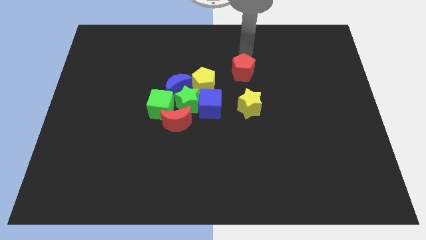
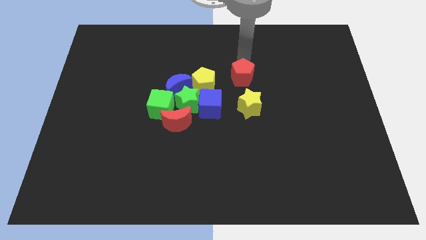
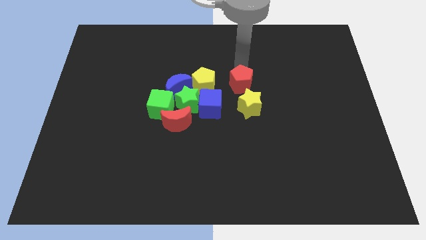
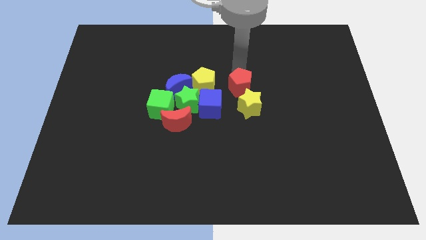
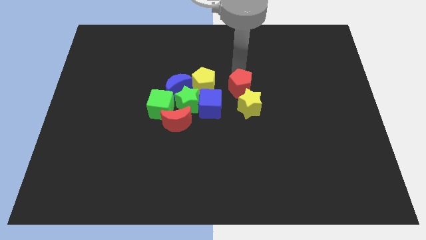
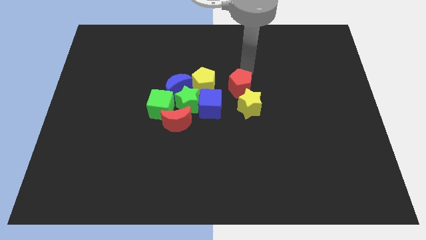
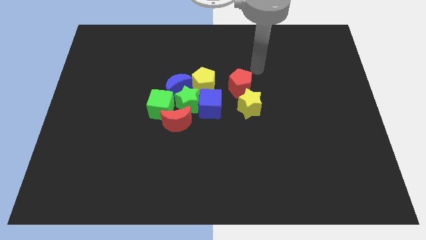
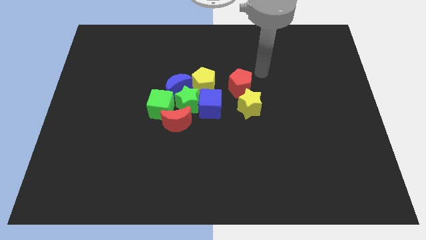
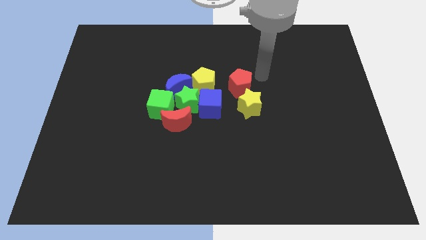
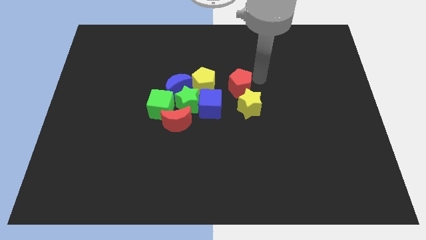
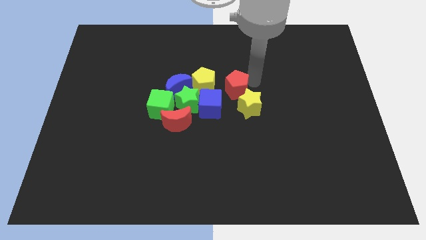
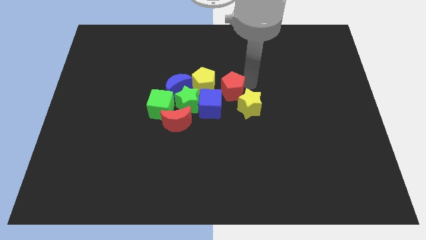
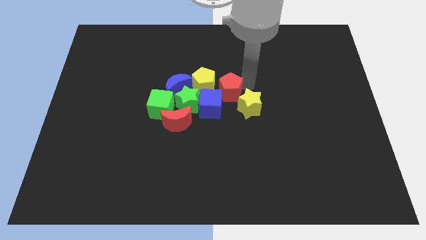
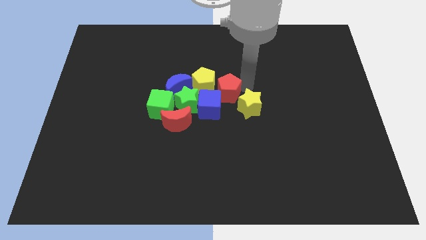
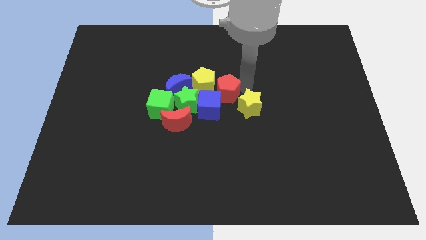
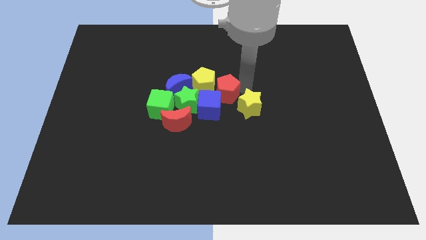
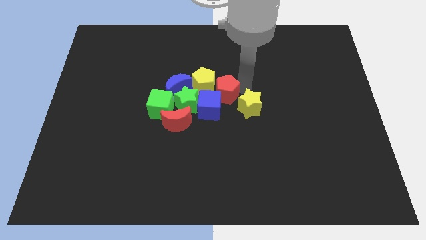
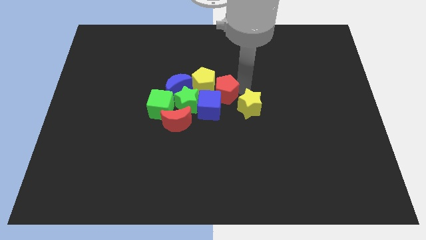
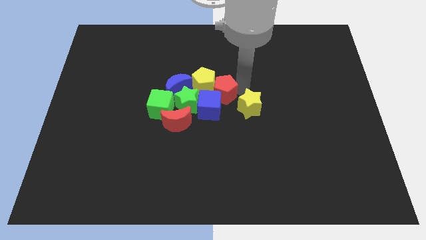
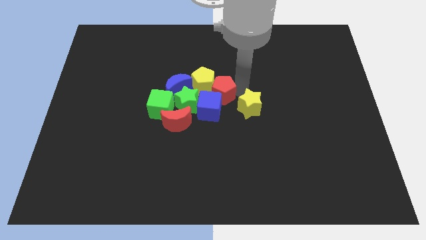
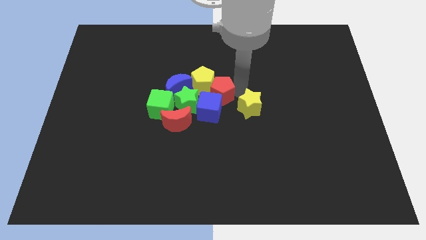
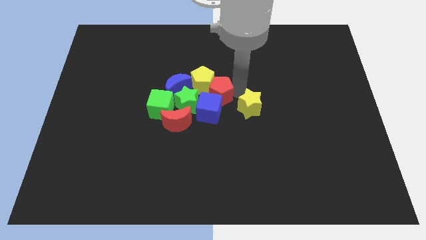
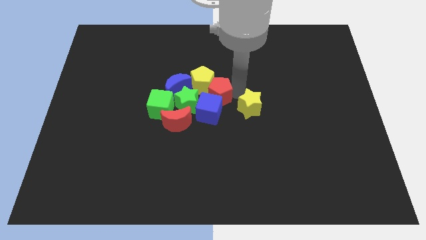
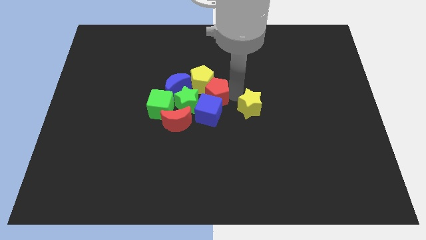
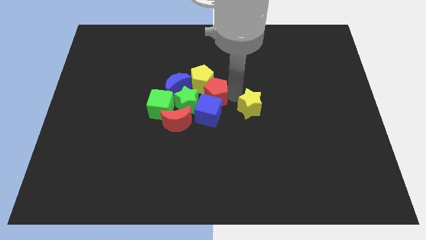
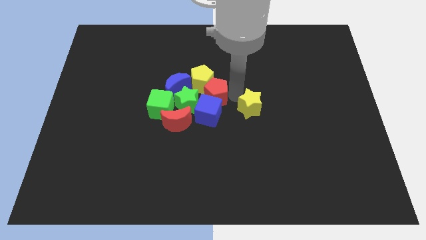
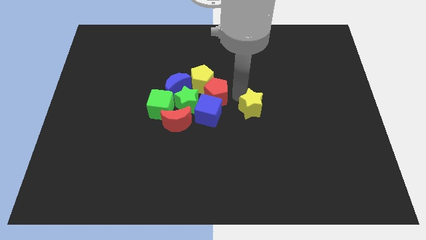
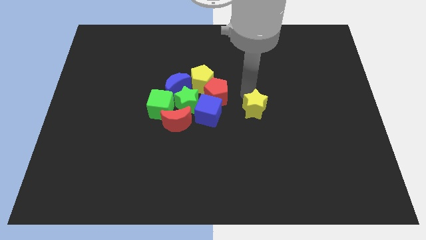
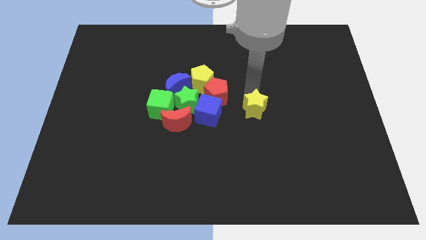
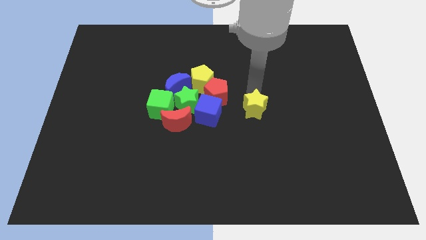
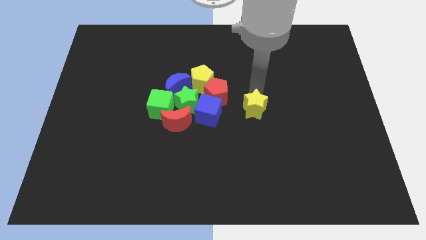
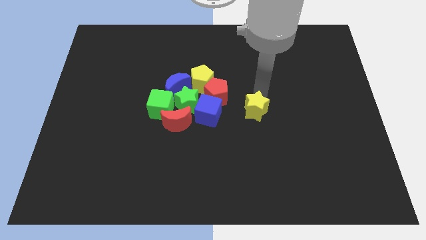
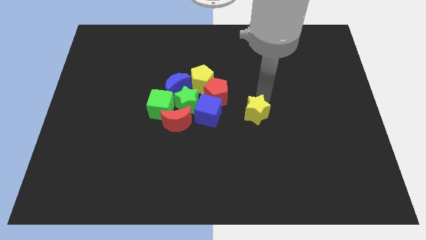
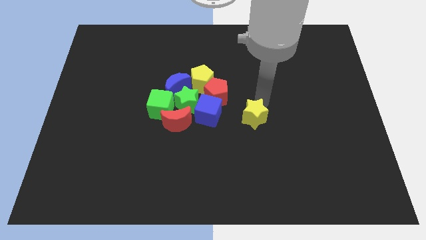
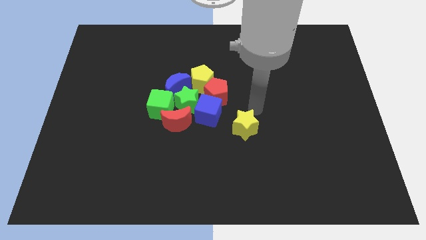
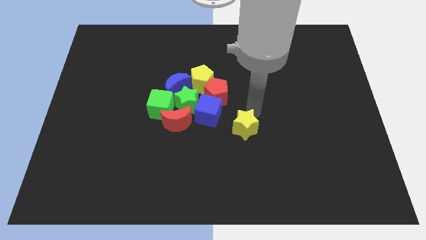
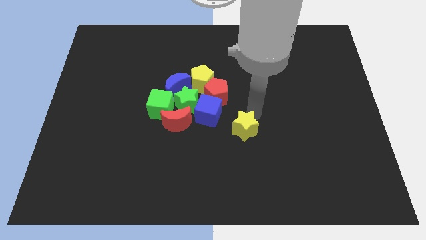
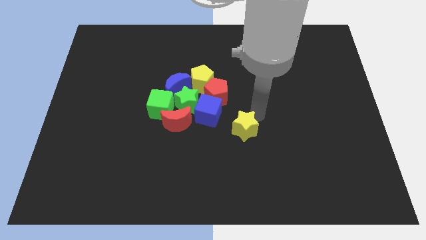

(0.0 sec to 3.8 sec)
move the red pentagon into the group of blocks

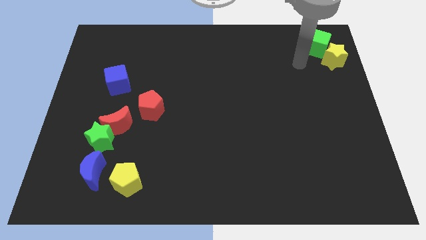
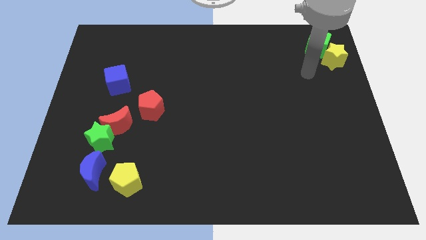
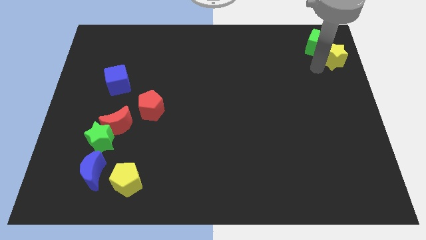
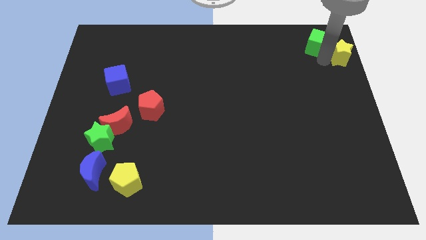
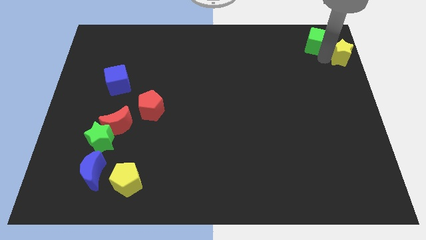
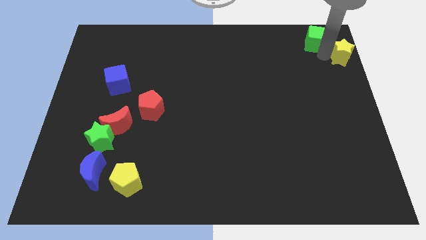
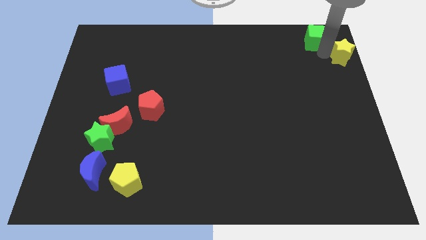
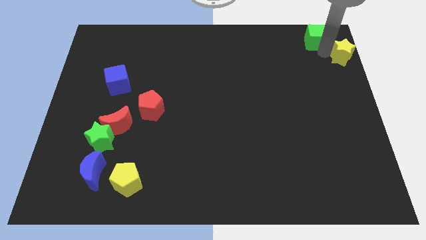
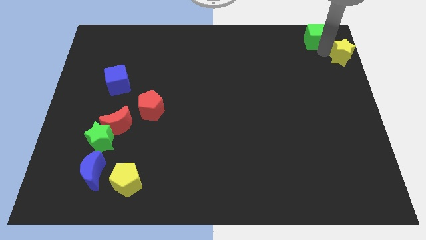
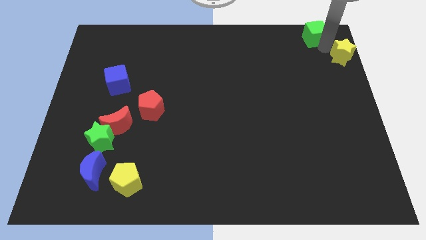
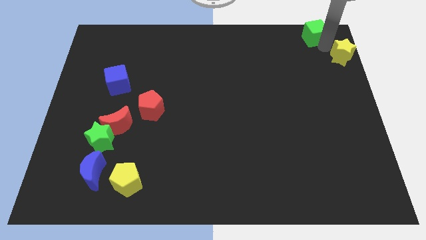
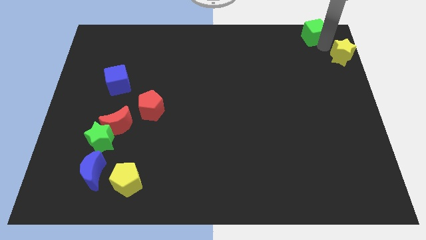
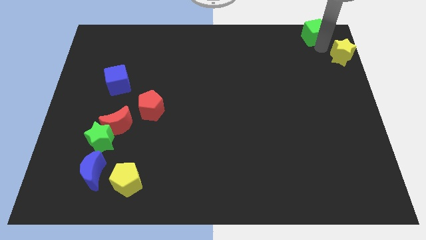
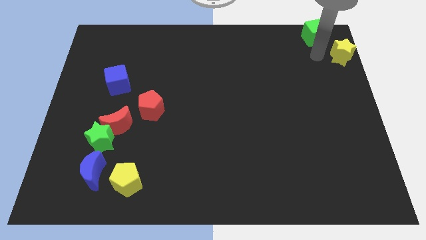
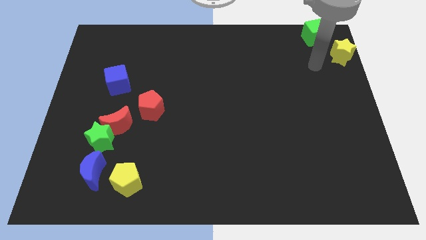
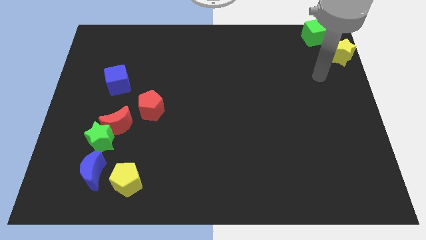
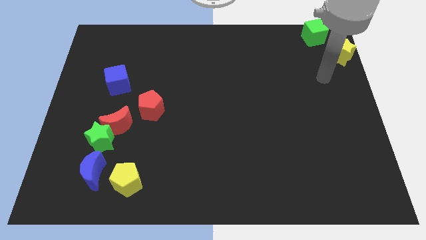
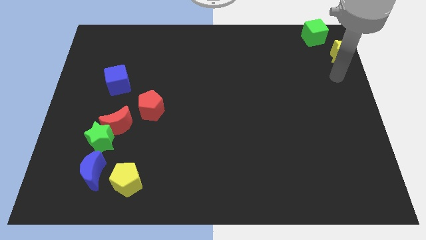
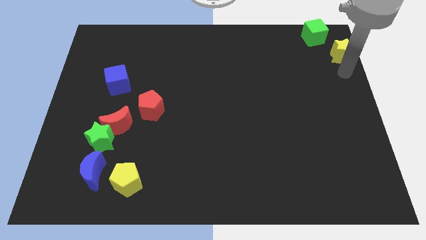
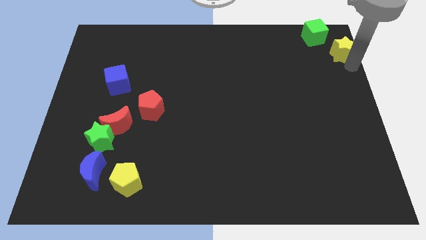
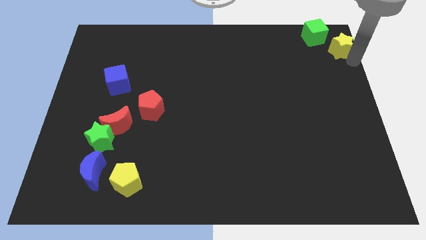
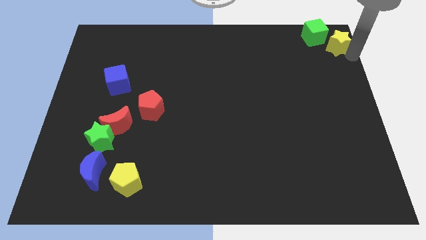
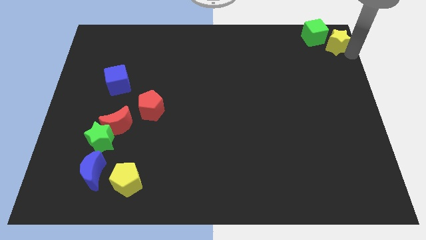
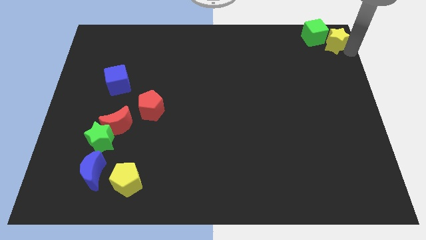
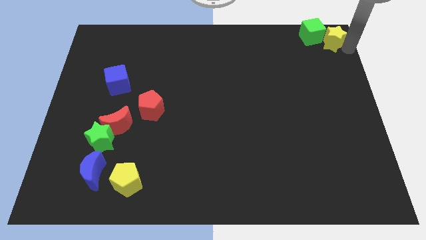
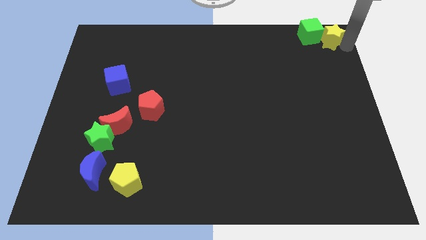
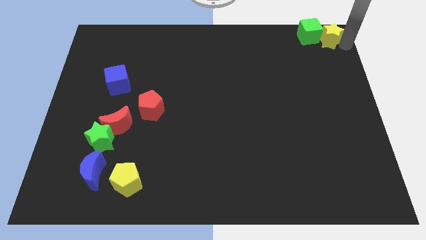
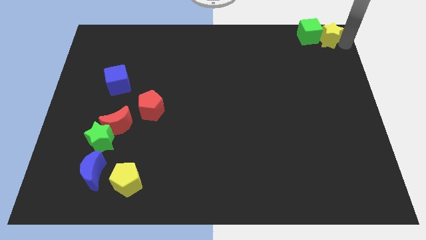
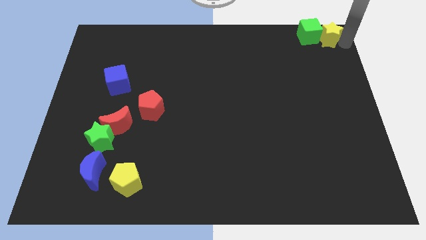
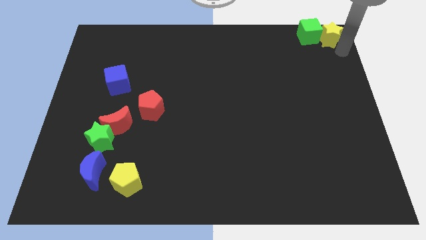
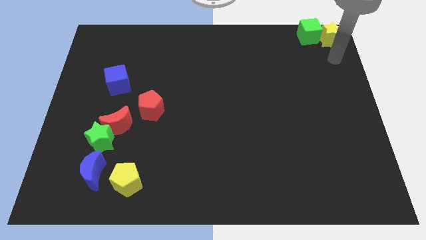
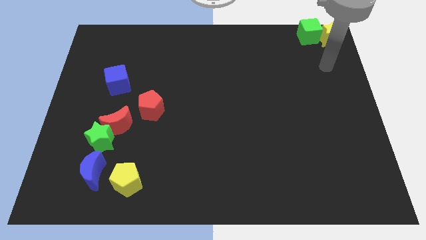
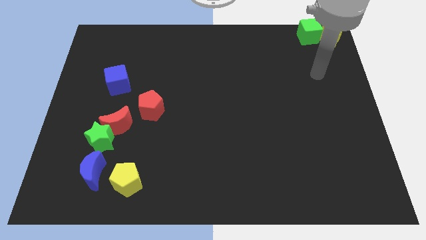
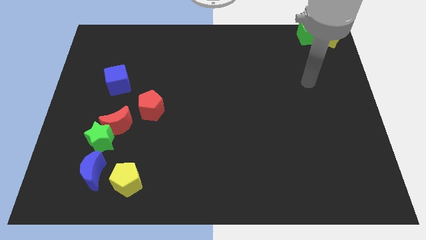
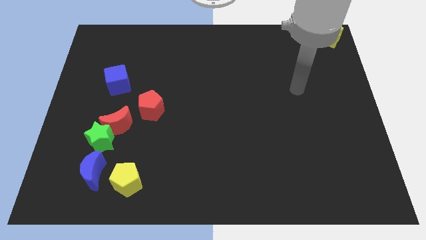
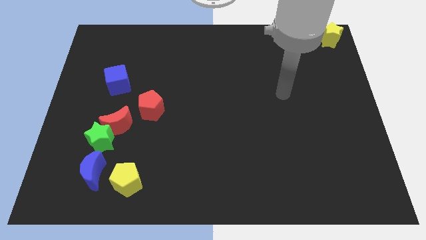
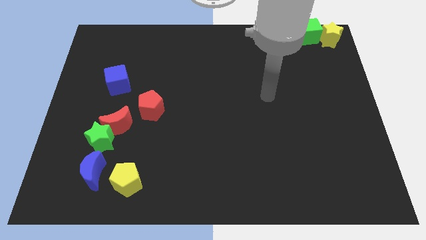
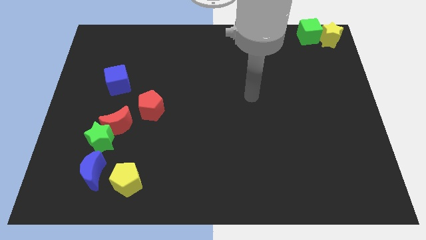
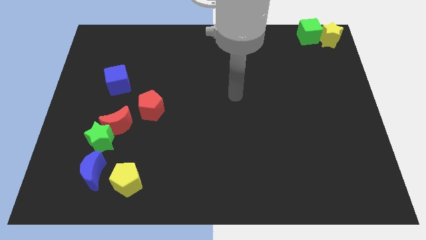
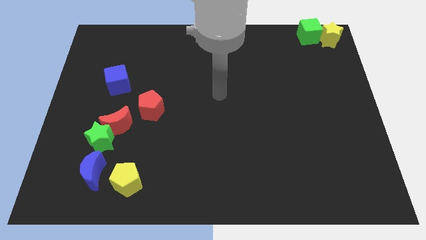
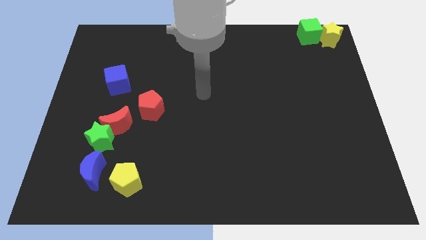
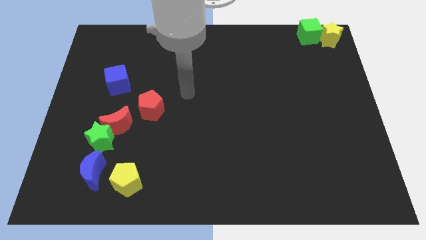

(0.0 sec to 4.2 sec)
move the green cube and yellow star to the top side

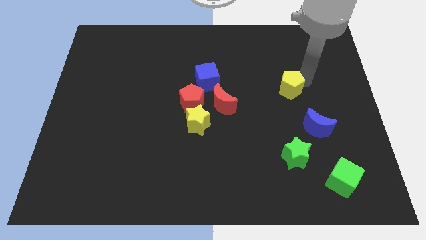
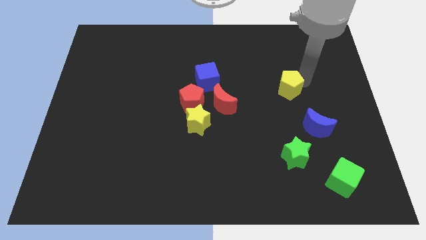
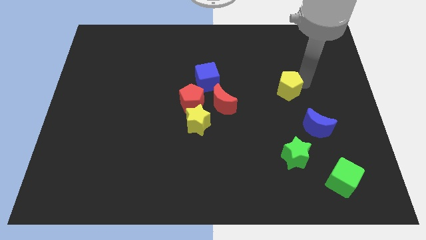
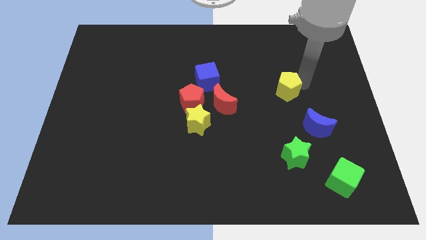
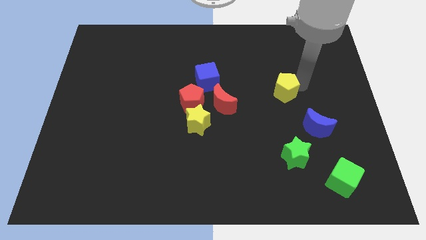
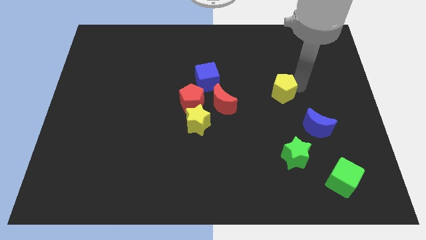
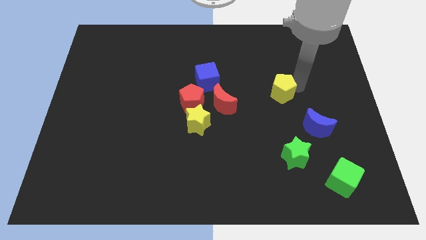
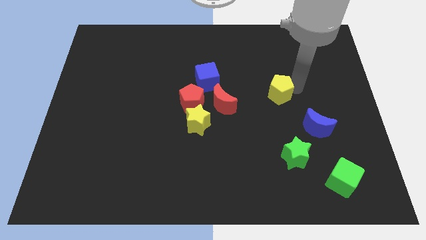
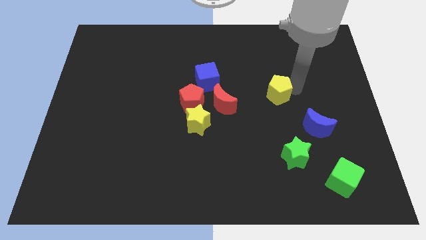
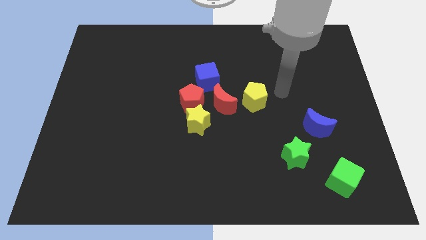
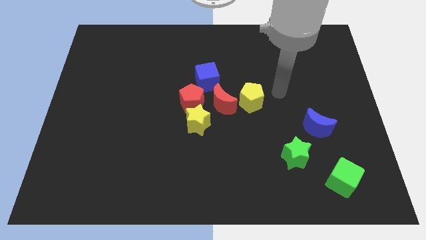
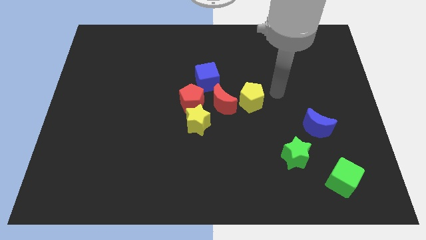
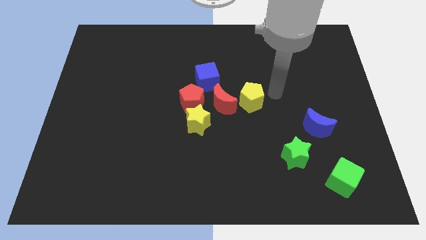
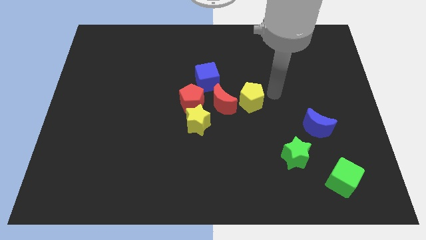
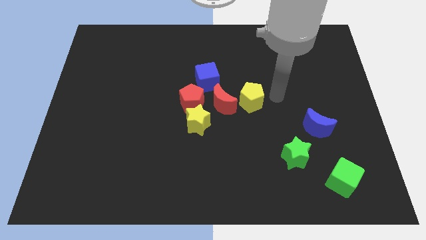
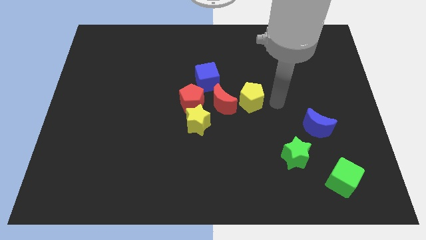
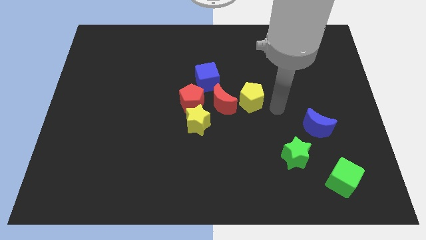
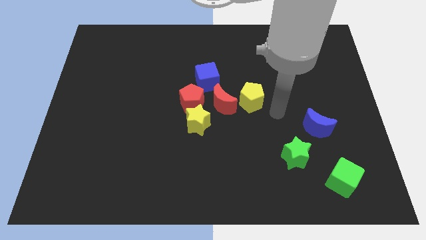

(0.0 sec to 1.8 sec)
move the yellow pentagon close to the red crescent
